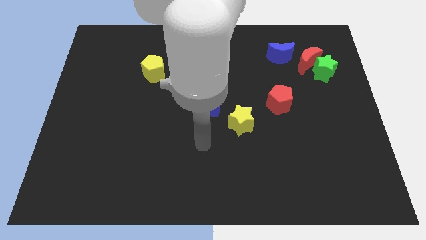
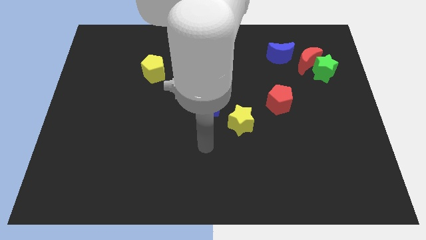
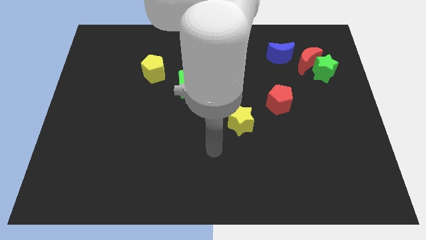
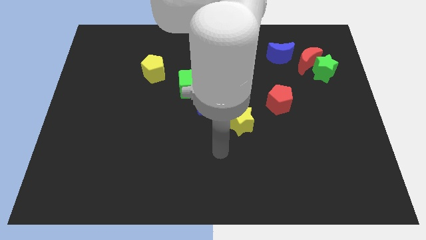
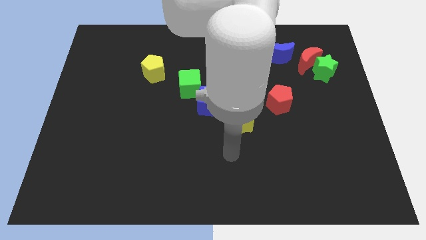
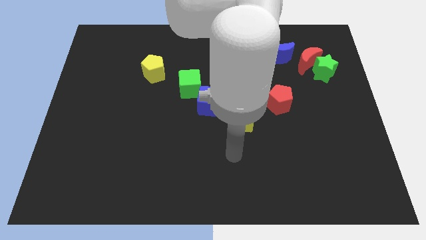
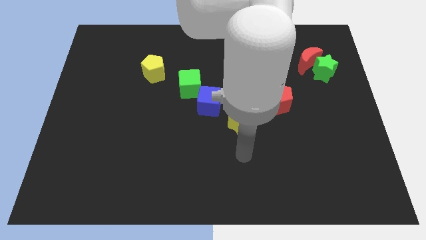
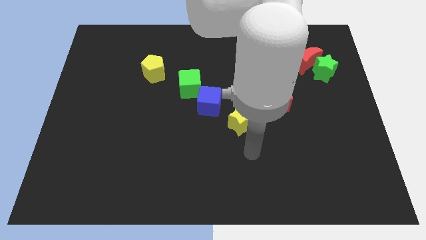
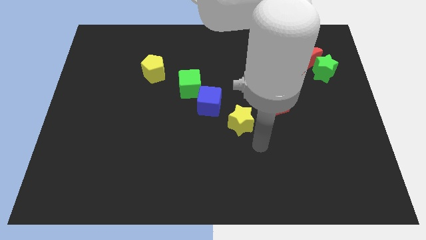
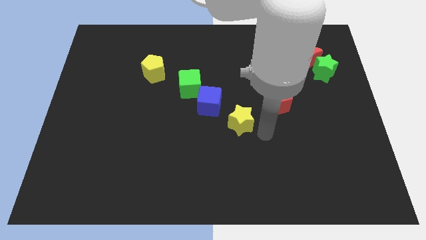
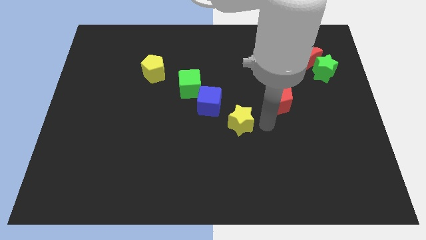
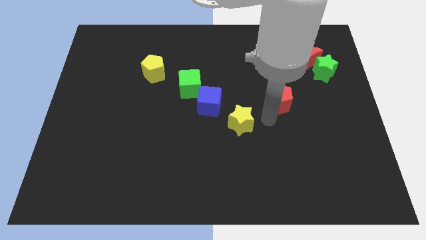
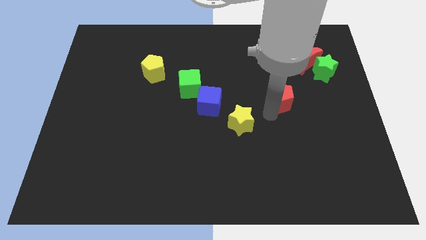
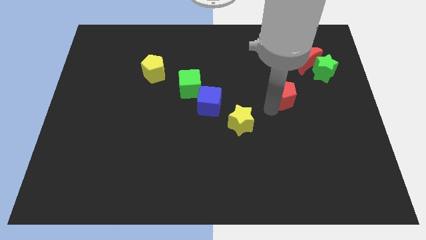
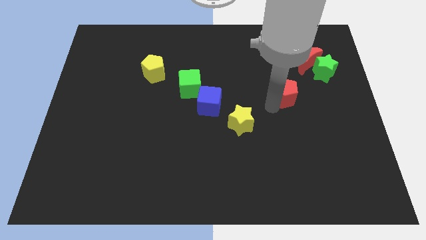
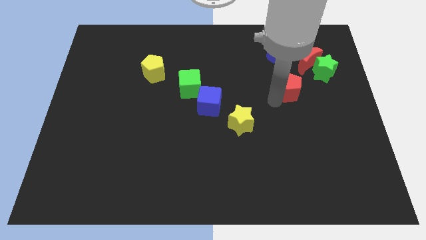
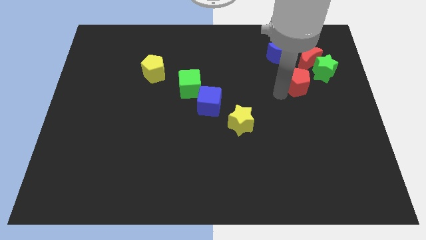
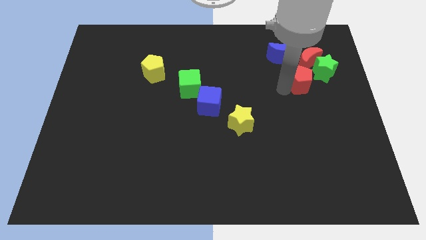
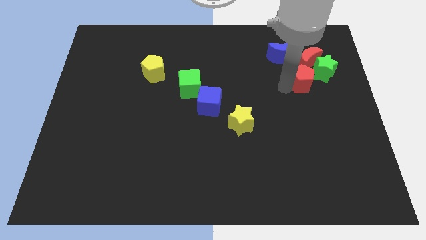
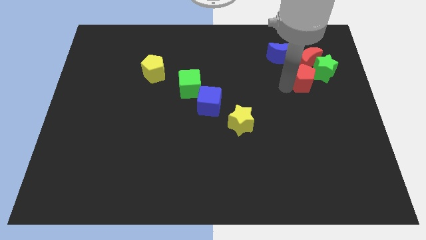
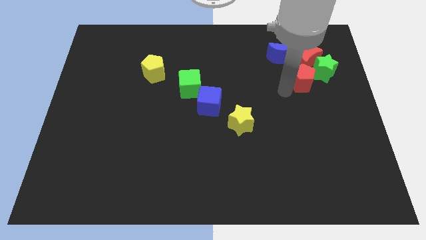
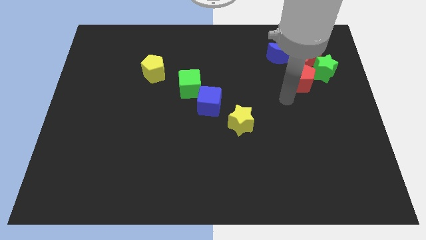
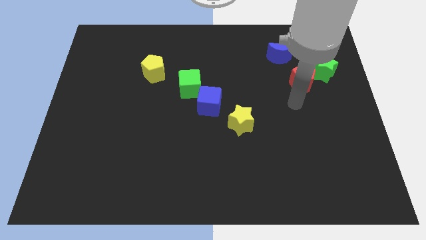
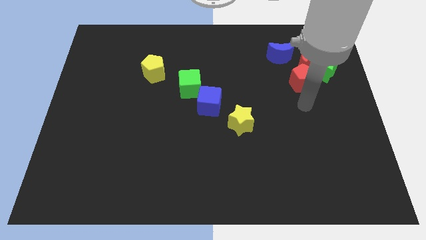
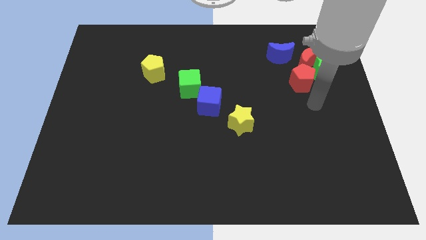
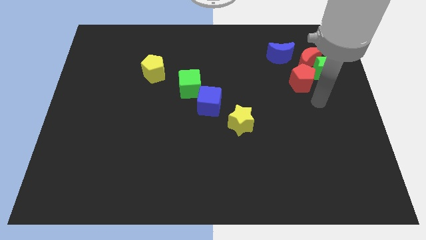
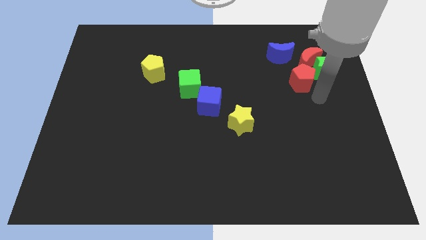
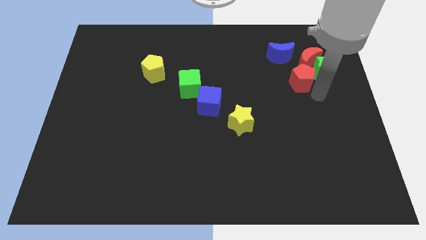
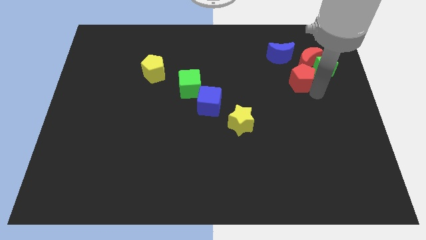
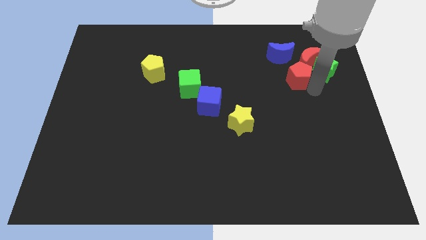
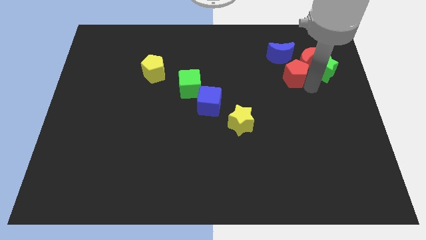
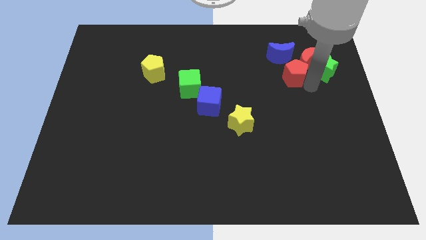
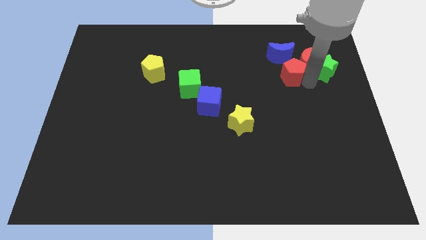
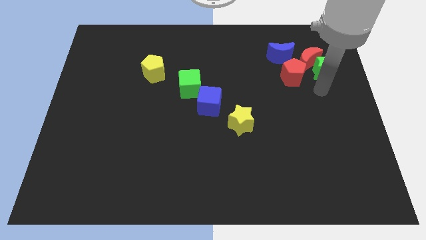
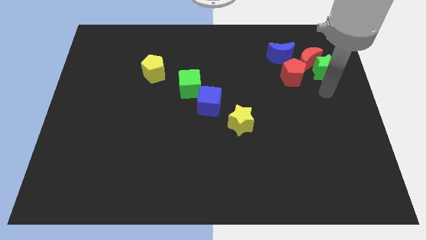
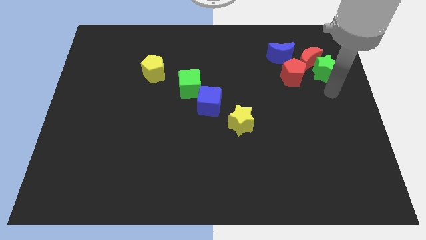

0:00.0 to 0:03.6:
push the red pentagon to the diagonal left of the red moon

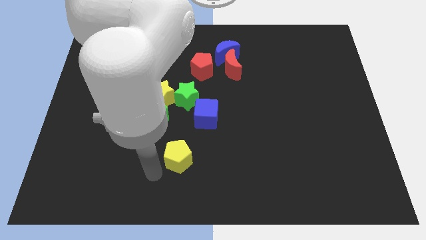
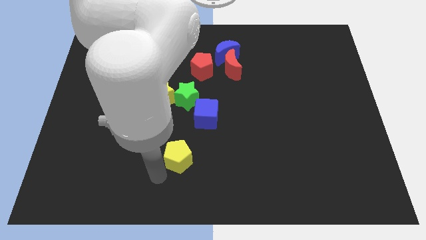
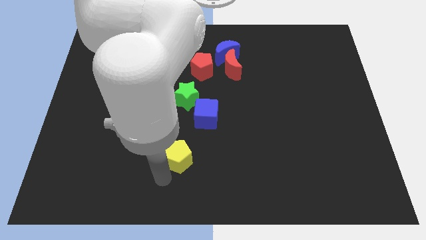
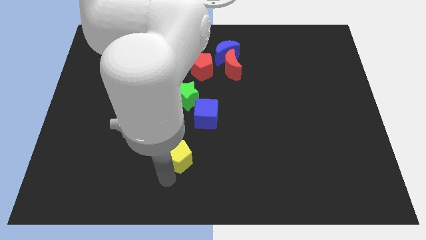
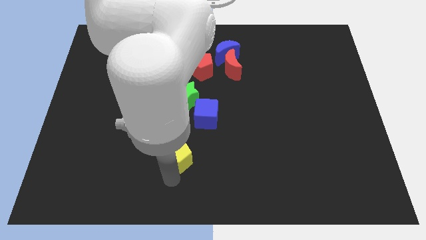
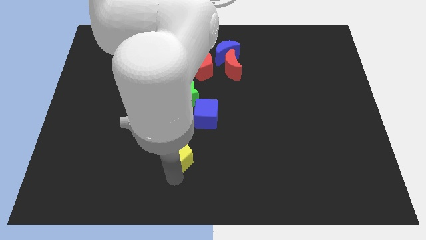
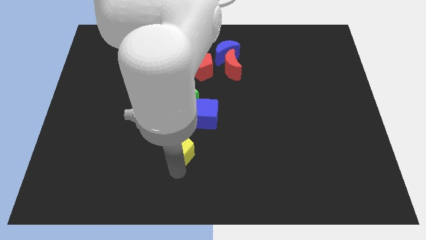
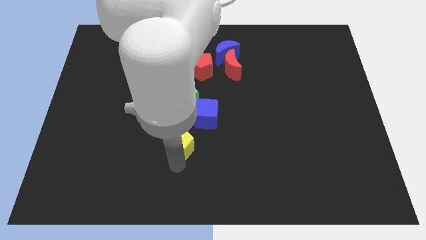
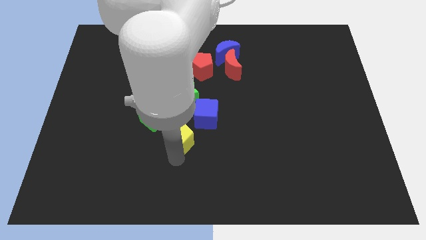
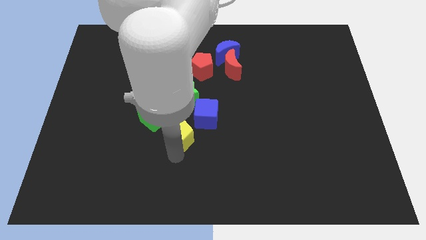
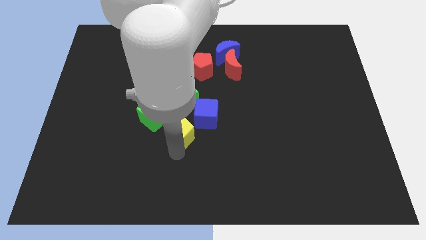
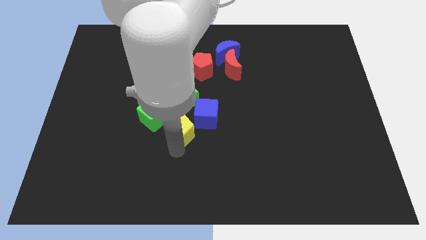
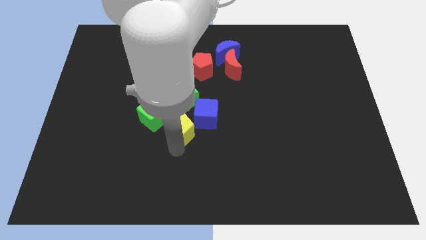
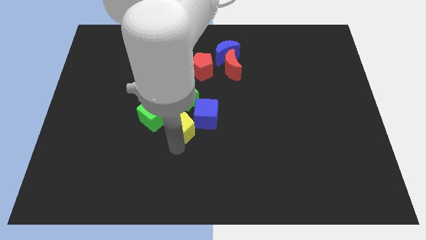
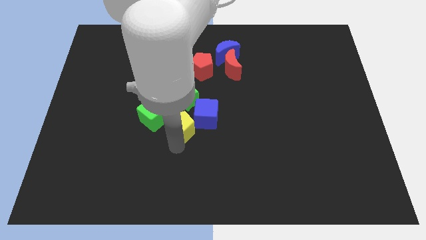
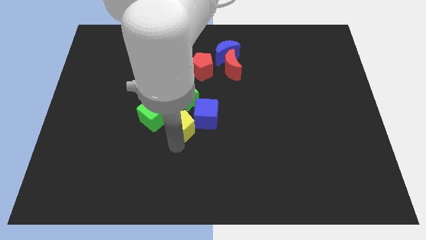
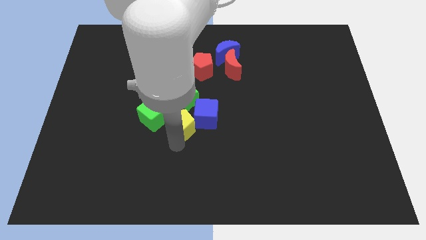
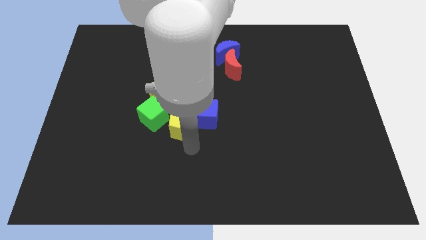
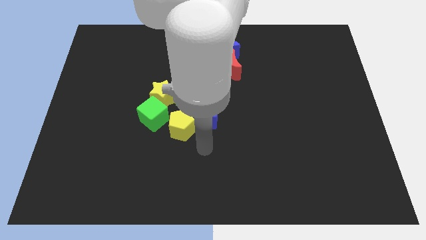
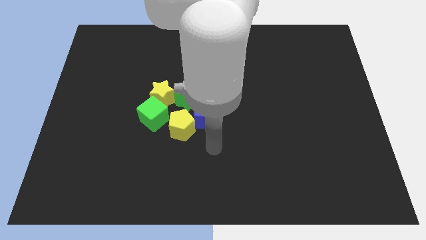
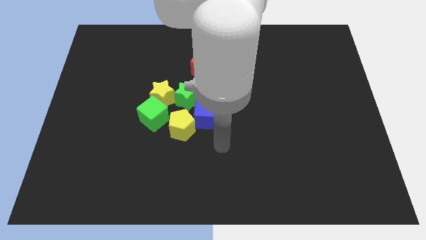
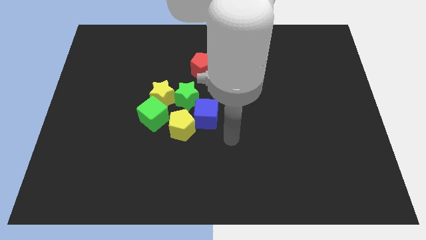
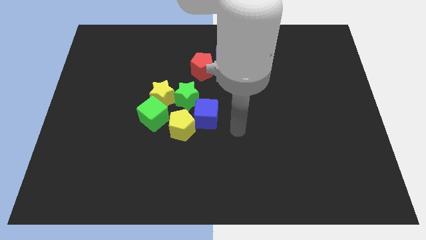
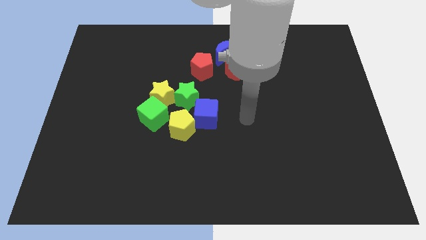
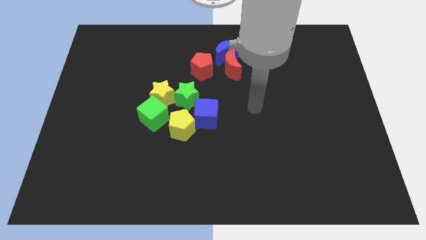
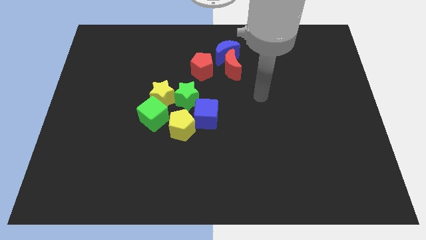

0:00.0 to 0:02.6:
put the yellow pentagon at the bottom left of the blue cube

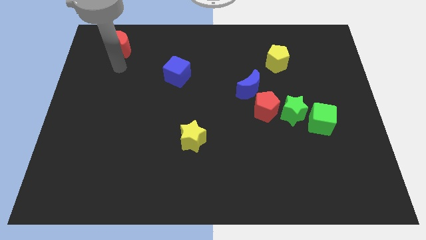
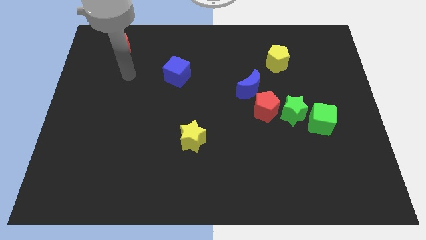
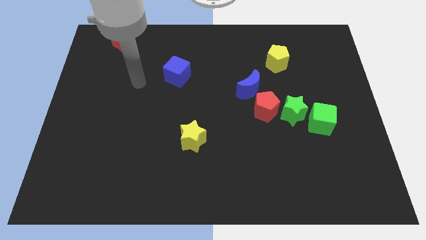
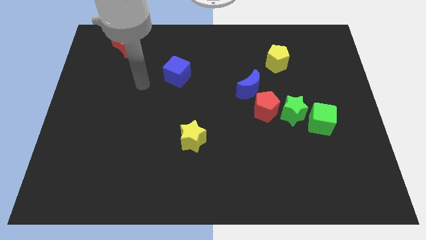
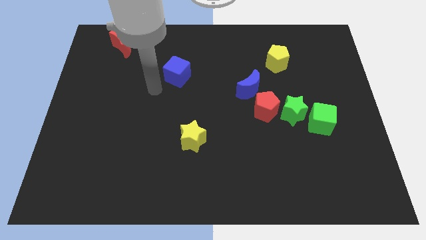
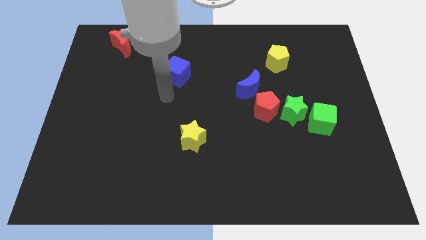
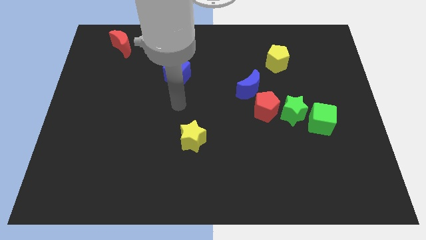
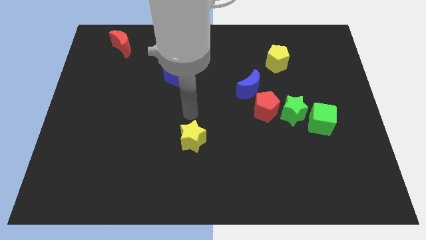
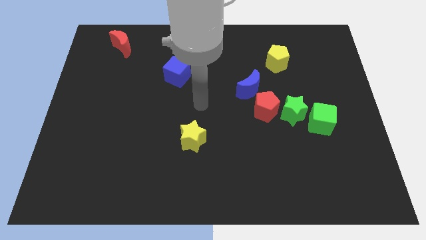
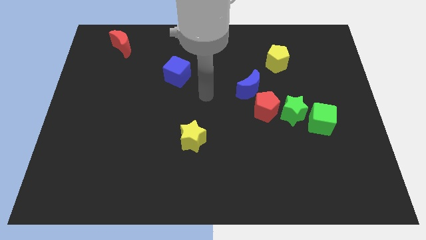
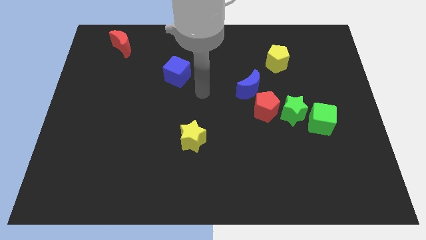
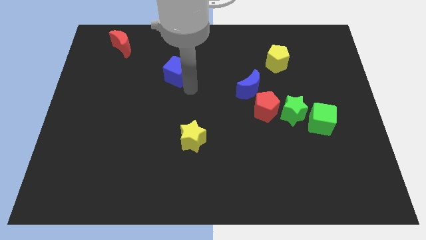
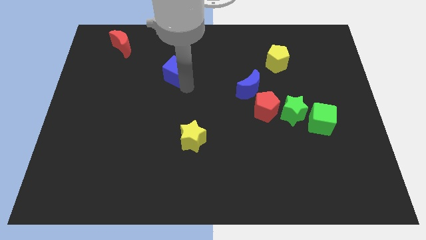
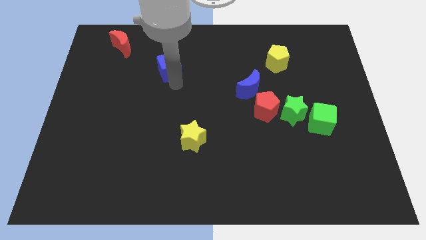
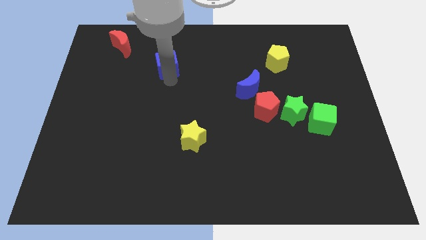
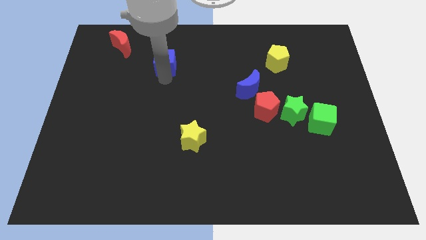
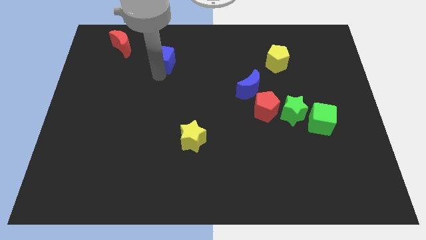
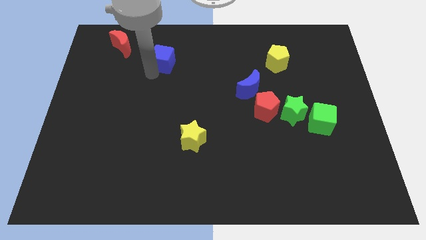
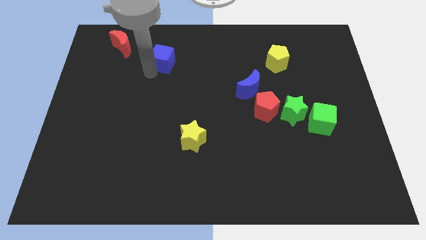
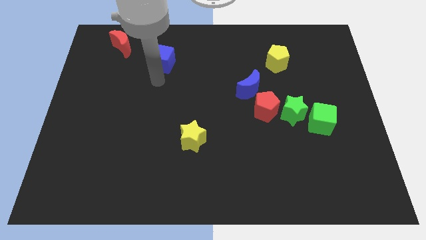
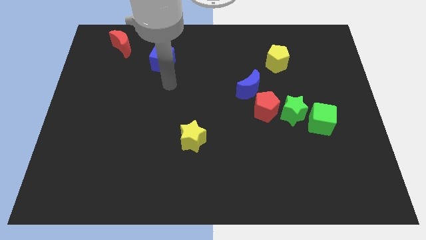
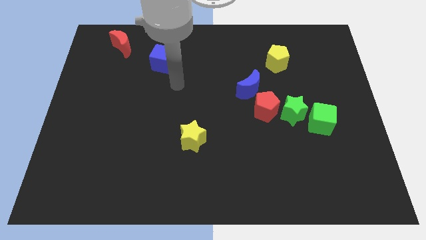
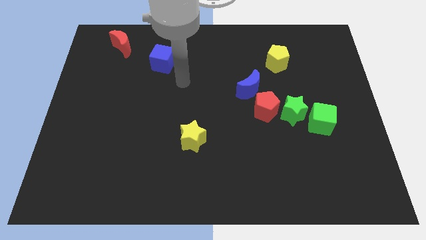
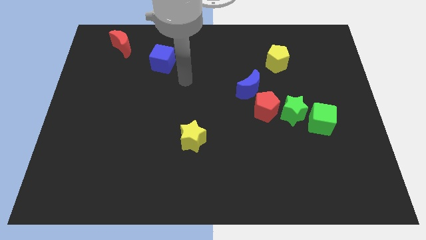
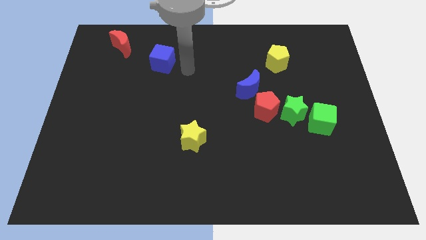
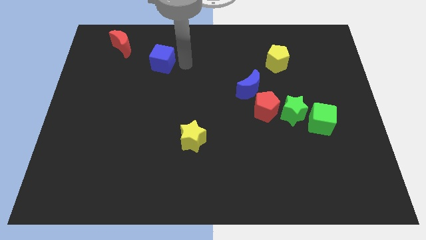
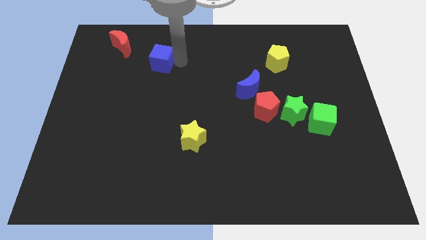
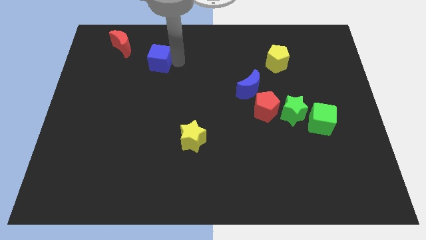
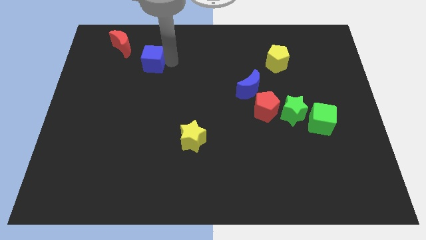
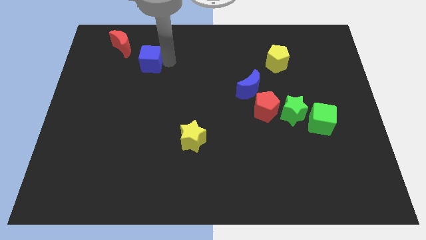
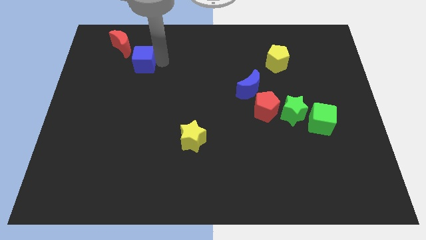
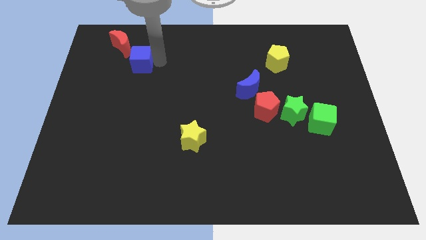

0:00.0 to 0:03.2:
push the blue cube closer to the red moon
